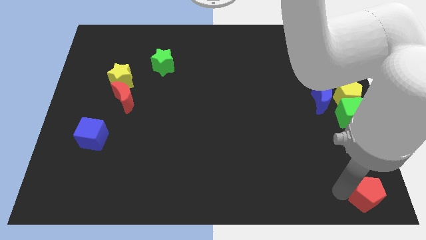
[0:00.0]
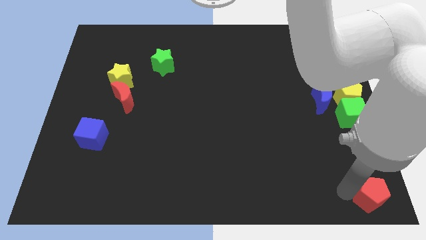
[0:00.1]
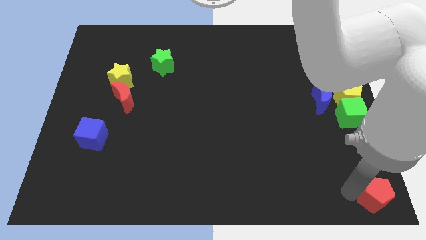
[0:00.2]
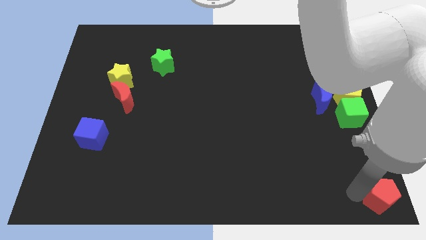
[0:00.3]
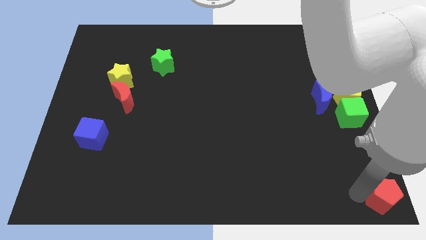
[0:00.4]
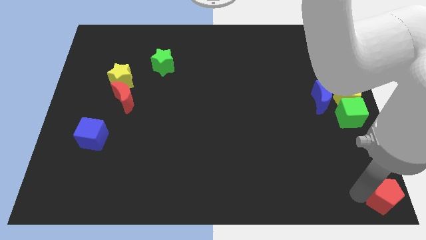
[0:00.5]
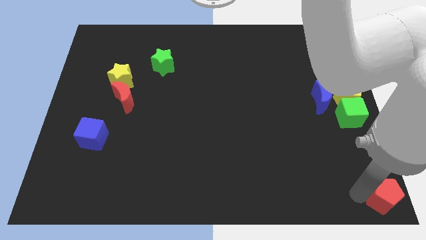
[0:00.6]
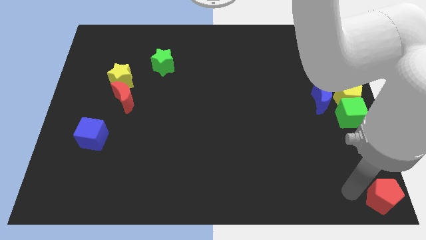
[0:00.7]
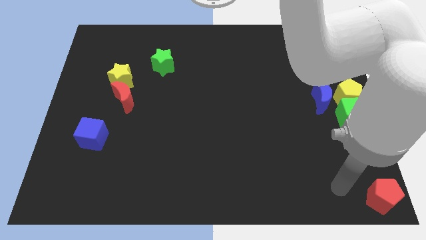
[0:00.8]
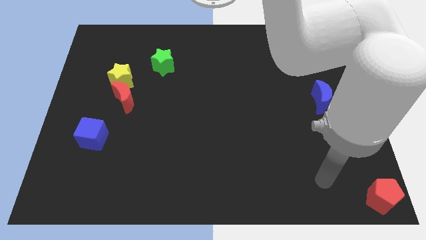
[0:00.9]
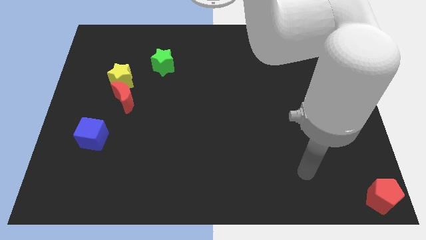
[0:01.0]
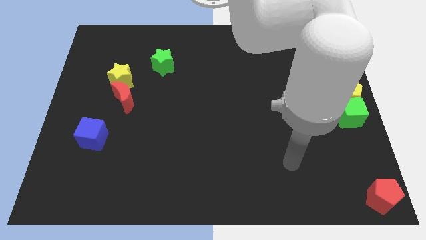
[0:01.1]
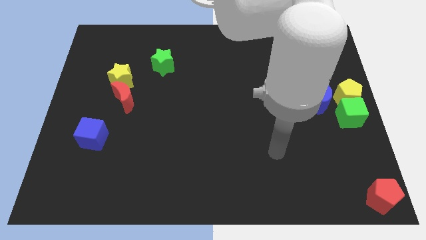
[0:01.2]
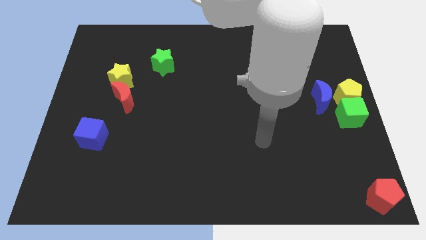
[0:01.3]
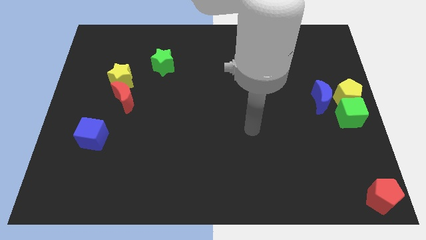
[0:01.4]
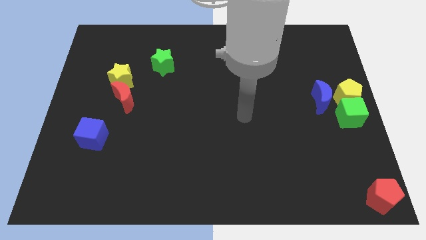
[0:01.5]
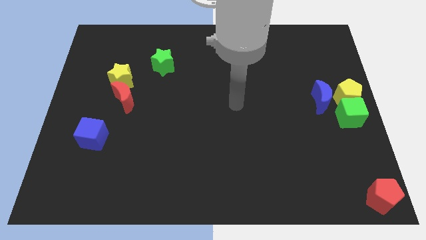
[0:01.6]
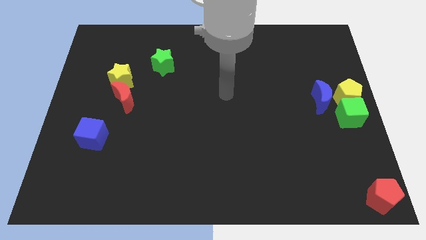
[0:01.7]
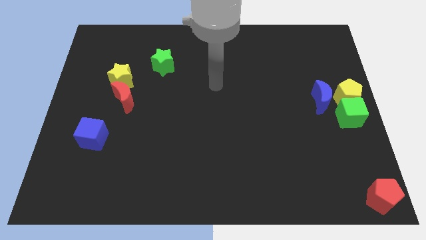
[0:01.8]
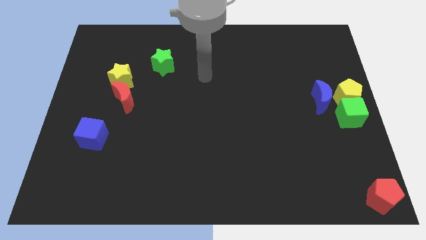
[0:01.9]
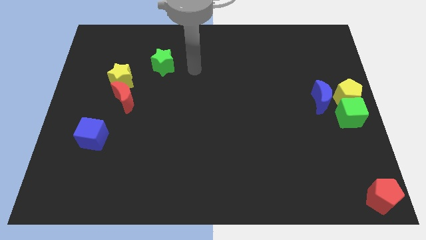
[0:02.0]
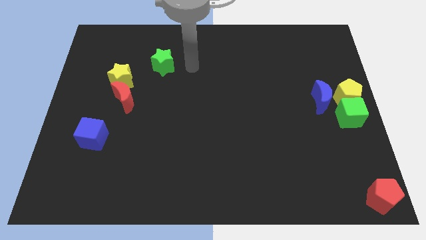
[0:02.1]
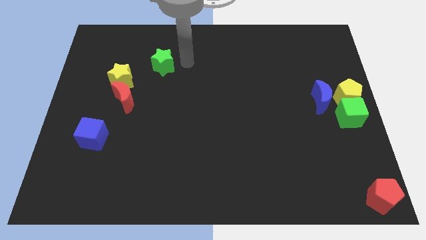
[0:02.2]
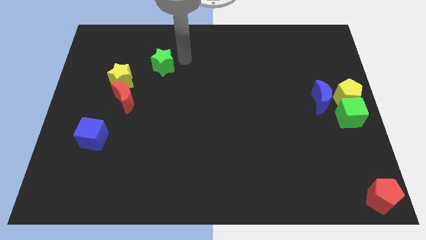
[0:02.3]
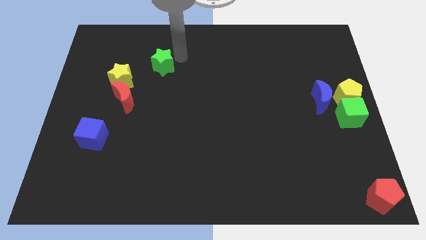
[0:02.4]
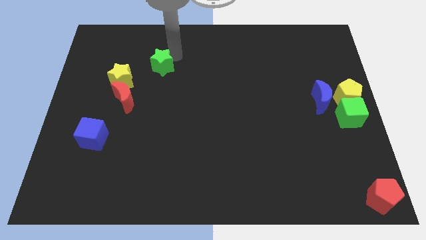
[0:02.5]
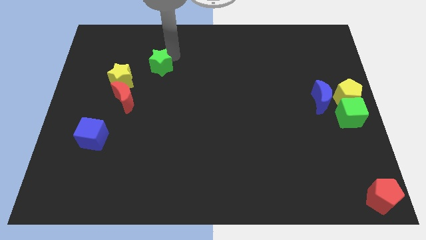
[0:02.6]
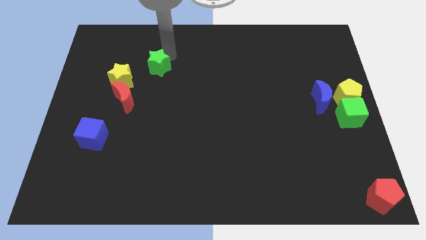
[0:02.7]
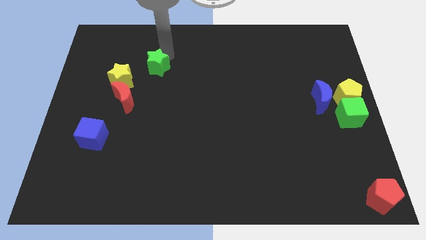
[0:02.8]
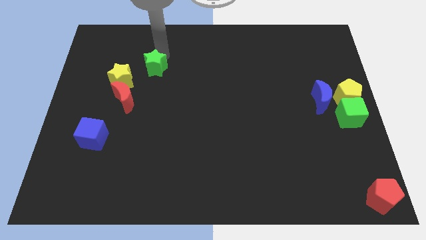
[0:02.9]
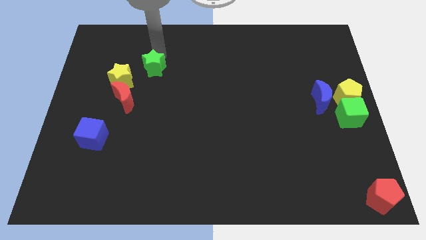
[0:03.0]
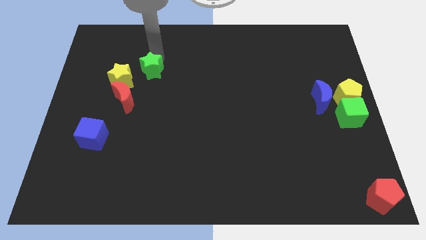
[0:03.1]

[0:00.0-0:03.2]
move the arm towards the green star

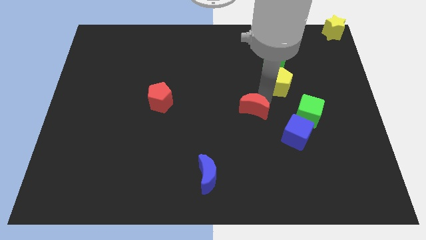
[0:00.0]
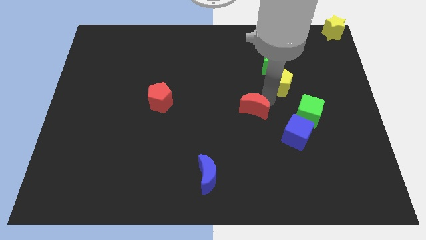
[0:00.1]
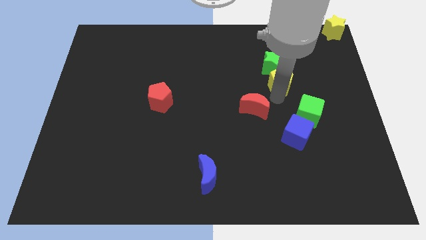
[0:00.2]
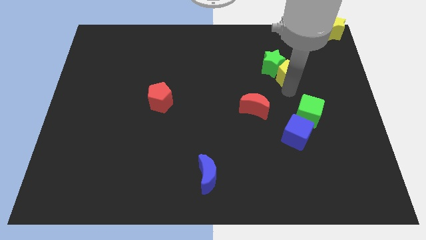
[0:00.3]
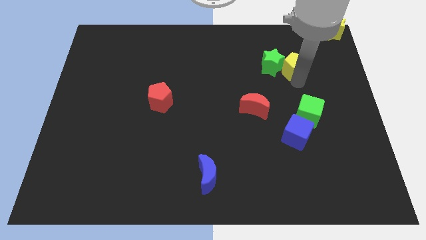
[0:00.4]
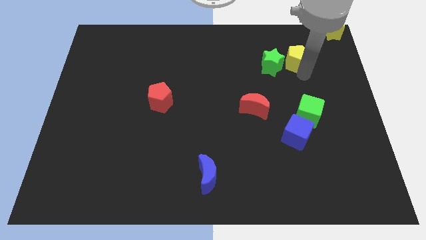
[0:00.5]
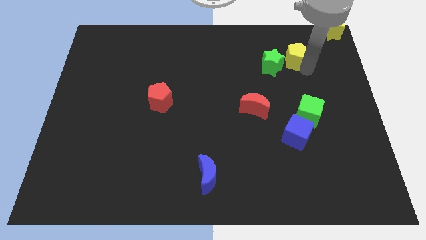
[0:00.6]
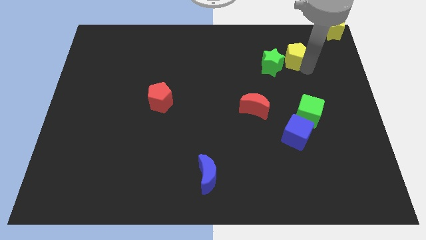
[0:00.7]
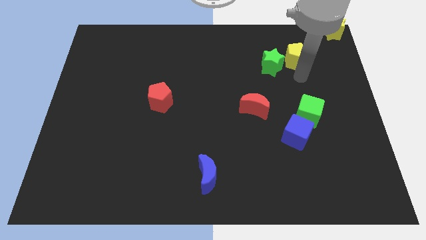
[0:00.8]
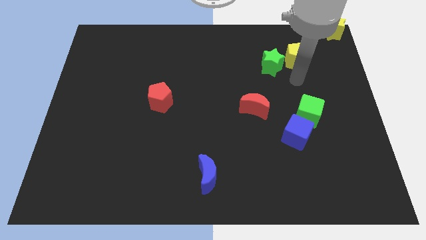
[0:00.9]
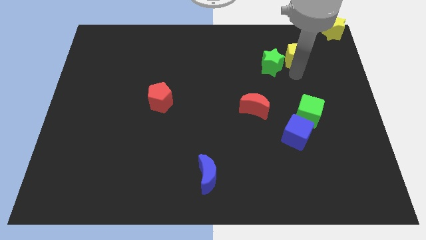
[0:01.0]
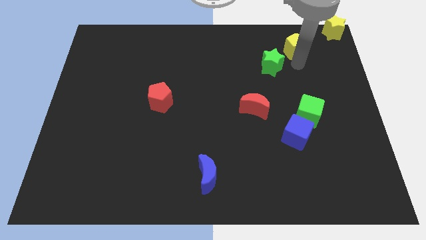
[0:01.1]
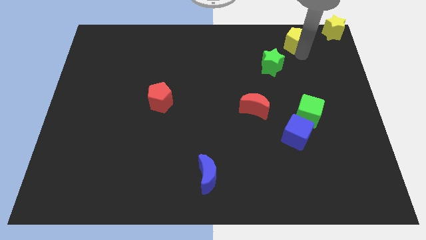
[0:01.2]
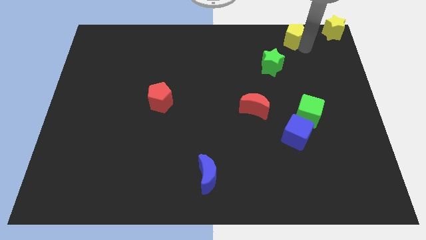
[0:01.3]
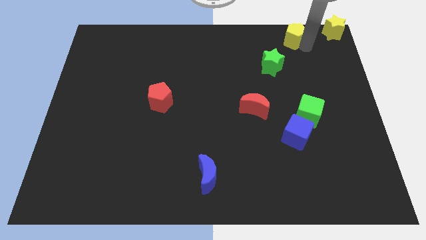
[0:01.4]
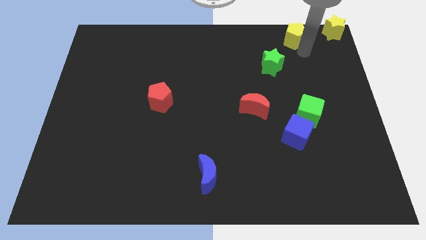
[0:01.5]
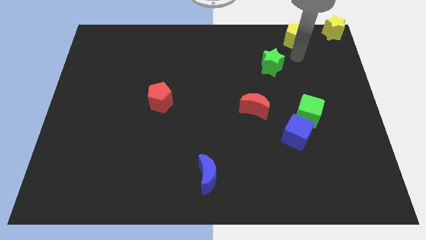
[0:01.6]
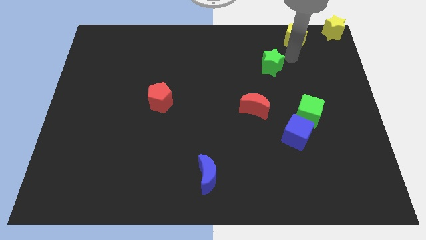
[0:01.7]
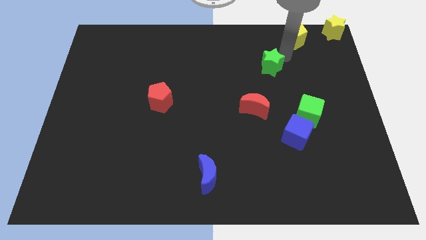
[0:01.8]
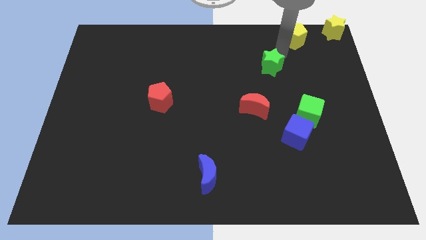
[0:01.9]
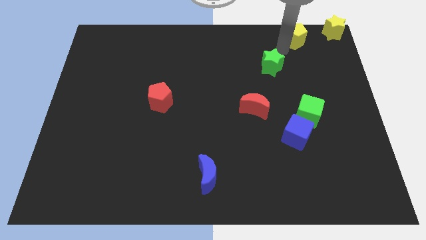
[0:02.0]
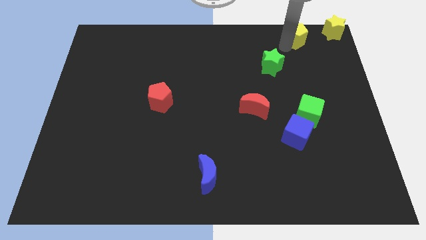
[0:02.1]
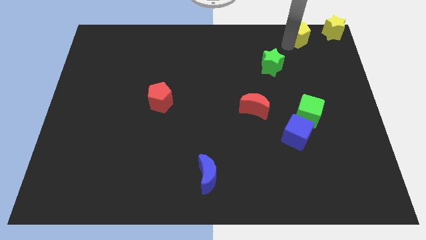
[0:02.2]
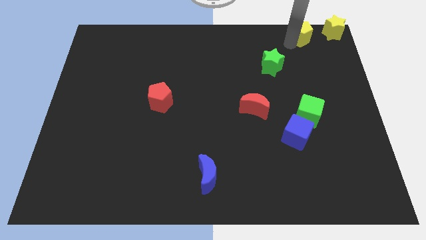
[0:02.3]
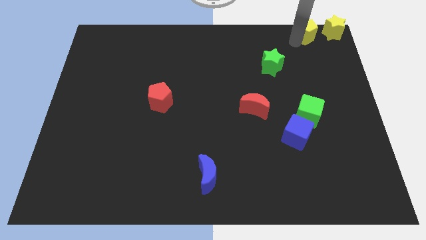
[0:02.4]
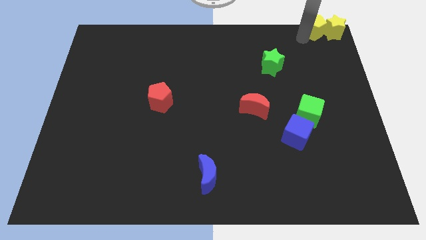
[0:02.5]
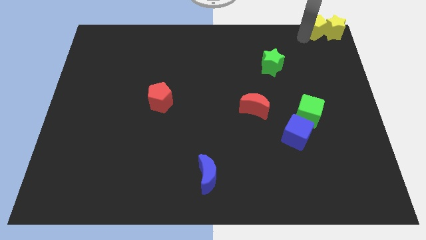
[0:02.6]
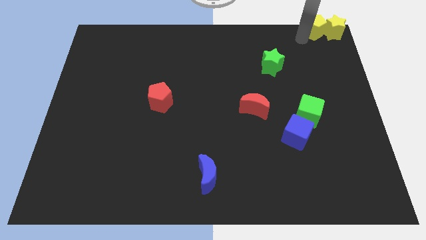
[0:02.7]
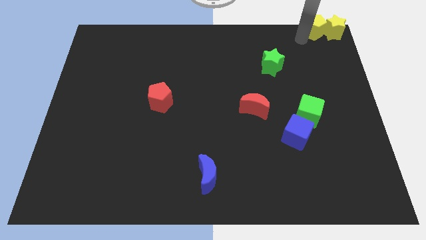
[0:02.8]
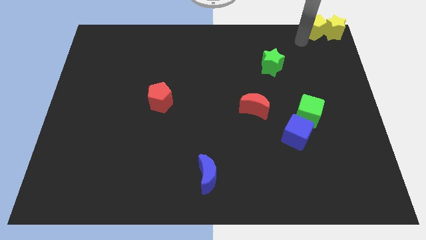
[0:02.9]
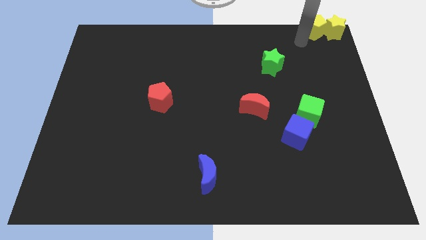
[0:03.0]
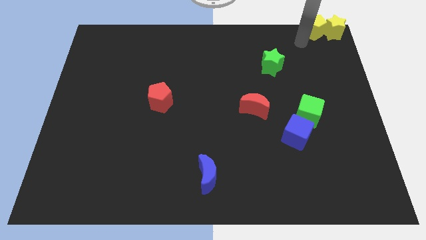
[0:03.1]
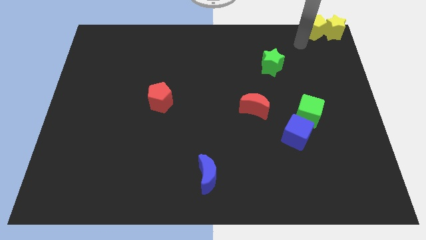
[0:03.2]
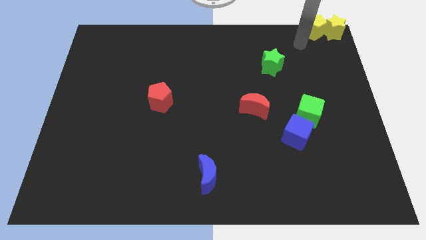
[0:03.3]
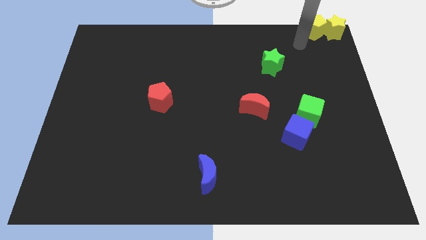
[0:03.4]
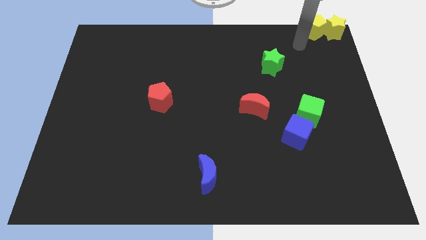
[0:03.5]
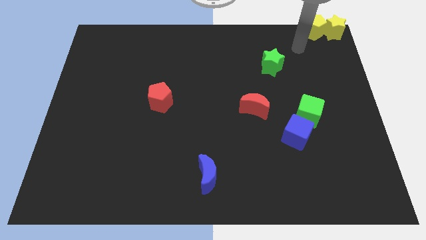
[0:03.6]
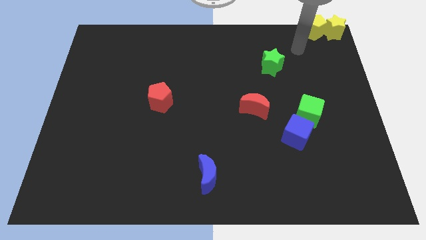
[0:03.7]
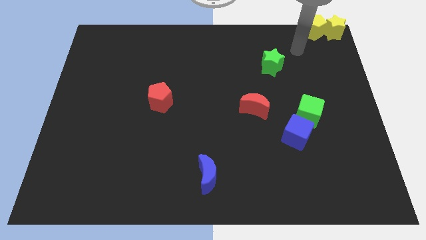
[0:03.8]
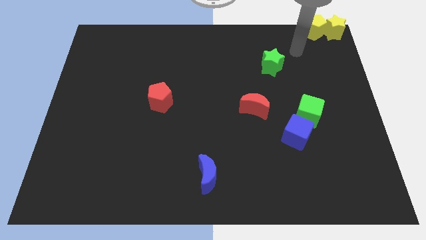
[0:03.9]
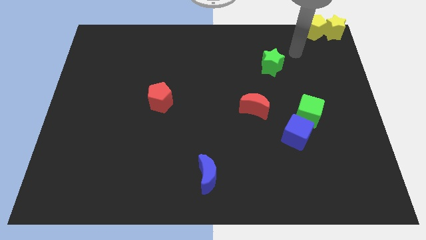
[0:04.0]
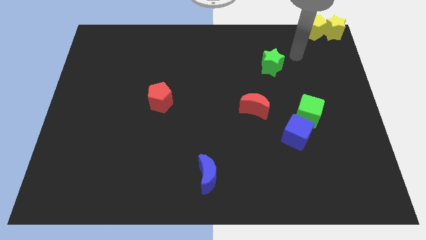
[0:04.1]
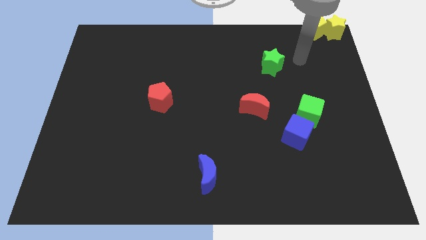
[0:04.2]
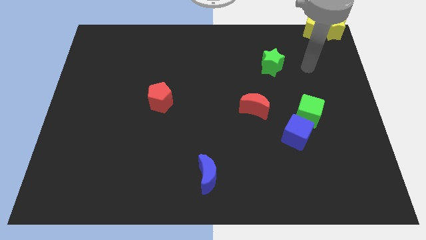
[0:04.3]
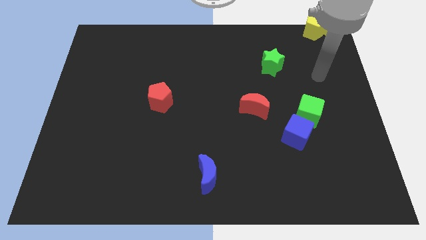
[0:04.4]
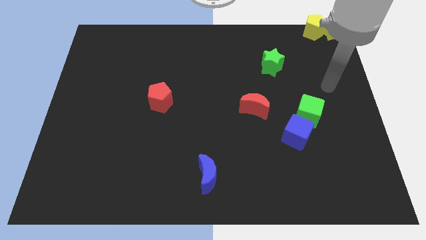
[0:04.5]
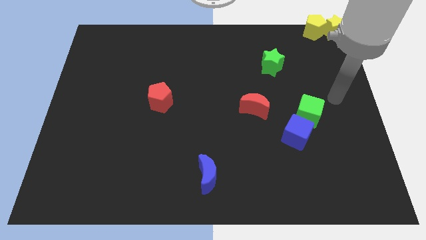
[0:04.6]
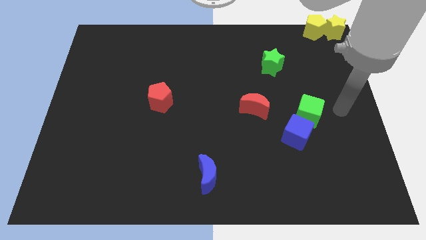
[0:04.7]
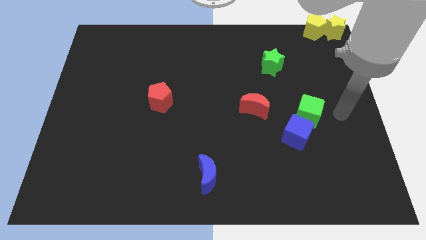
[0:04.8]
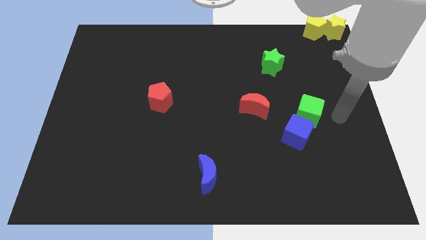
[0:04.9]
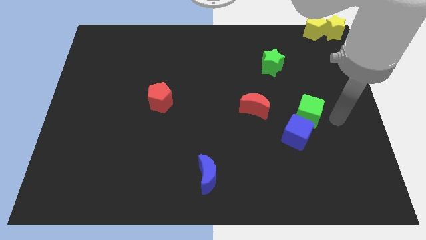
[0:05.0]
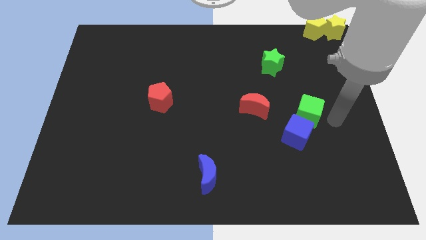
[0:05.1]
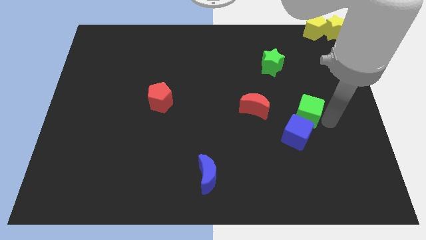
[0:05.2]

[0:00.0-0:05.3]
push yellow pentagon into the yellow star

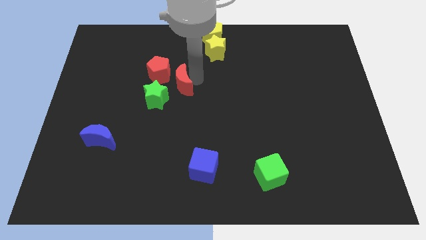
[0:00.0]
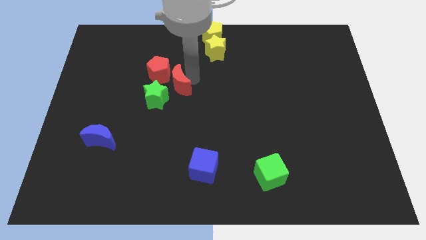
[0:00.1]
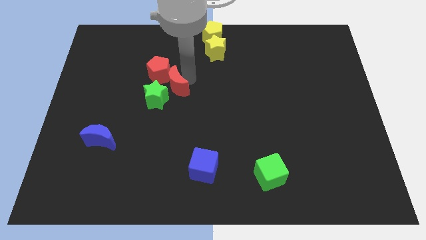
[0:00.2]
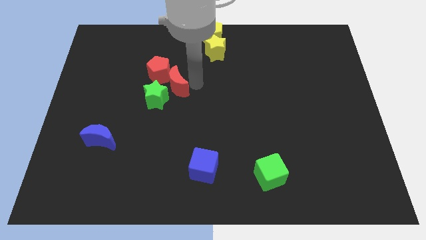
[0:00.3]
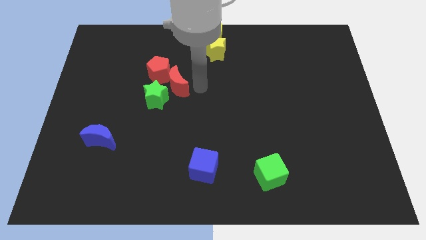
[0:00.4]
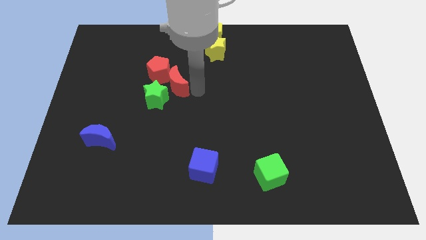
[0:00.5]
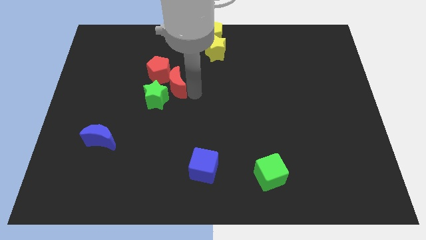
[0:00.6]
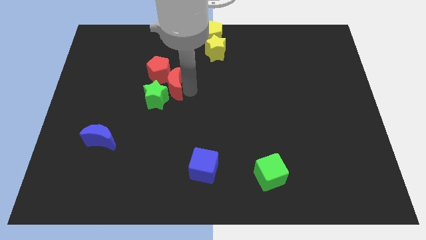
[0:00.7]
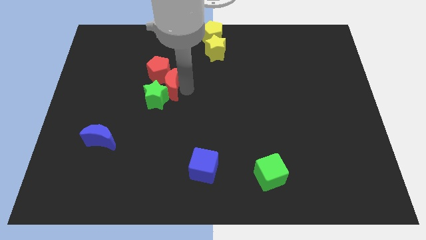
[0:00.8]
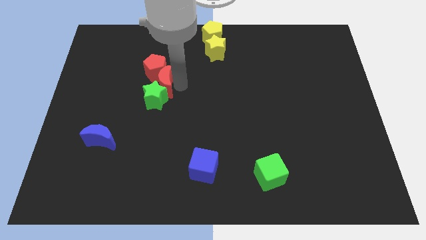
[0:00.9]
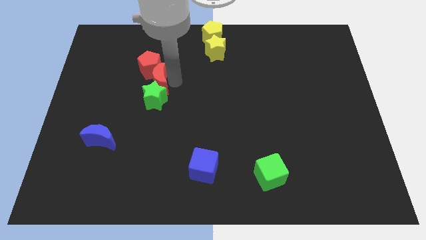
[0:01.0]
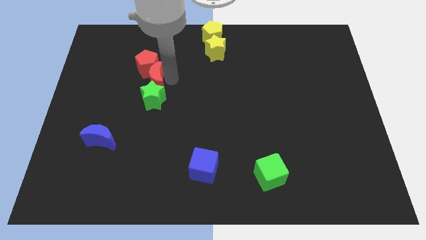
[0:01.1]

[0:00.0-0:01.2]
push the red moon in between the red pentagon and green star
